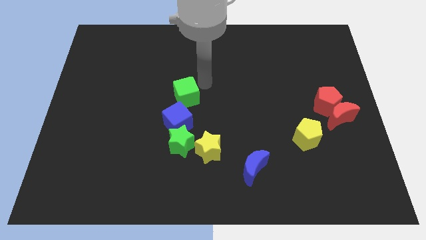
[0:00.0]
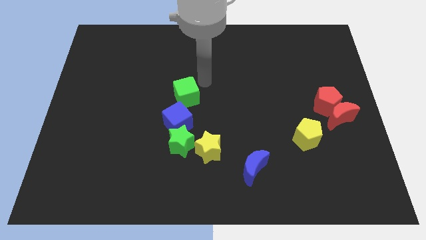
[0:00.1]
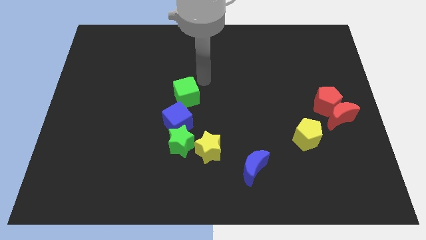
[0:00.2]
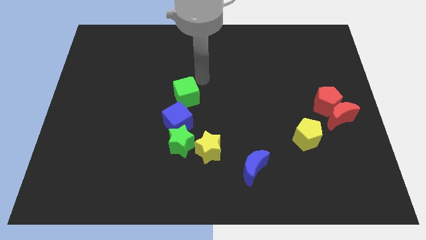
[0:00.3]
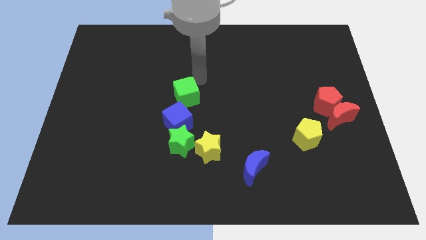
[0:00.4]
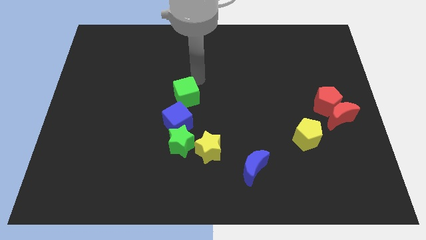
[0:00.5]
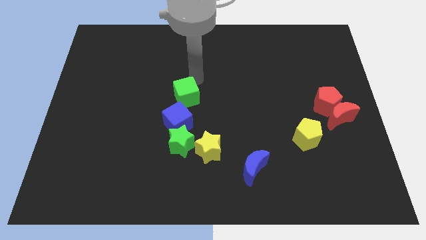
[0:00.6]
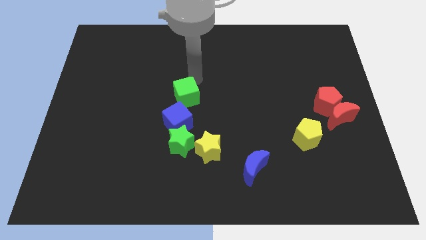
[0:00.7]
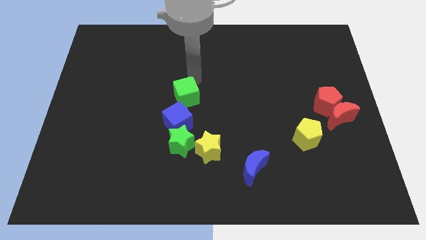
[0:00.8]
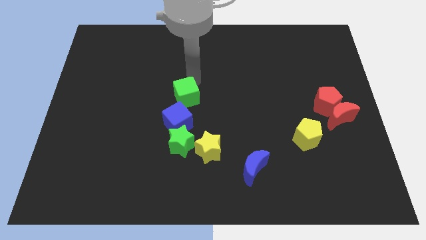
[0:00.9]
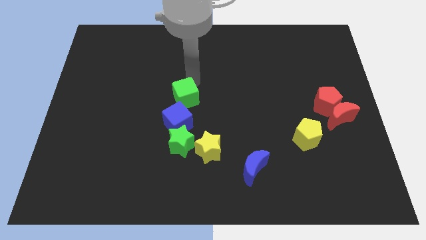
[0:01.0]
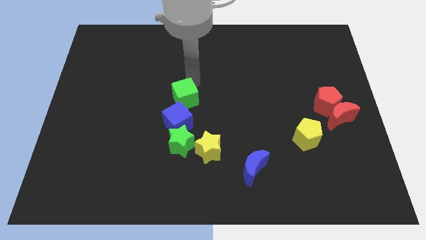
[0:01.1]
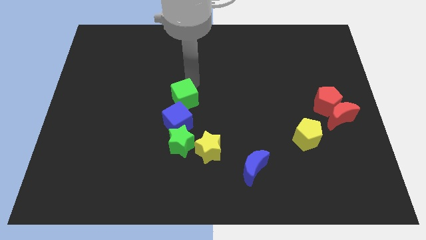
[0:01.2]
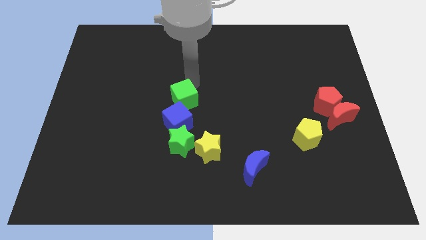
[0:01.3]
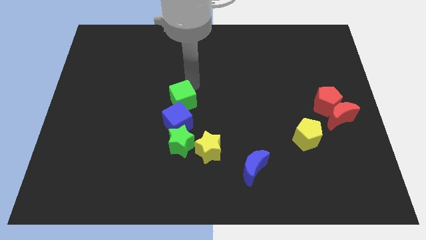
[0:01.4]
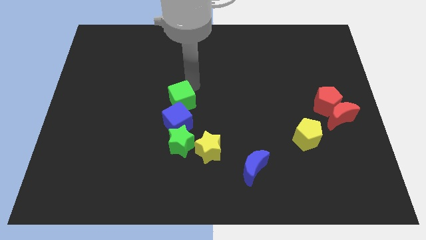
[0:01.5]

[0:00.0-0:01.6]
push green cube in to blue cube

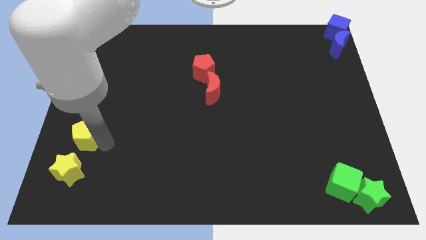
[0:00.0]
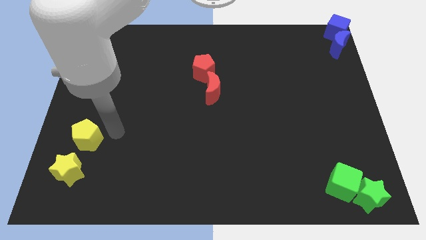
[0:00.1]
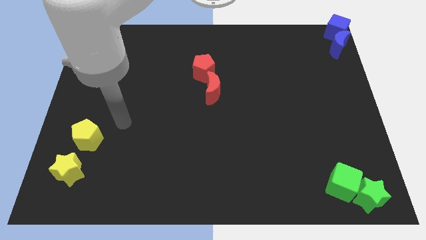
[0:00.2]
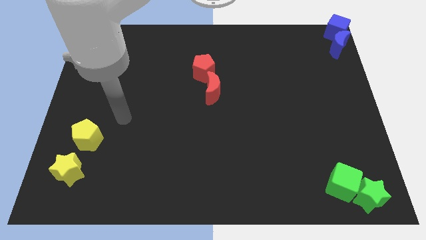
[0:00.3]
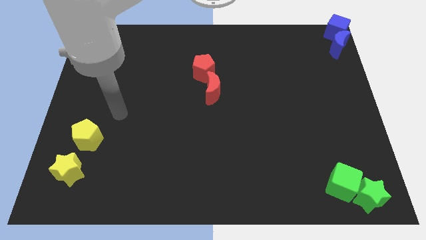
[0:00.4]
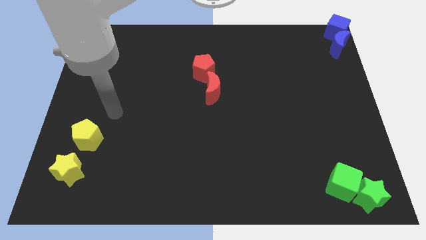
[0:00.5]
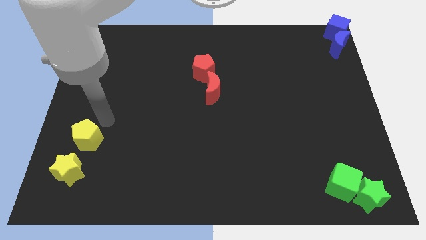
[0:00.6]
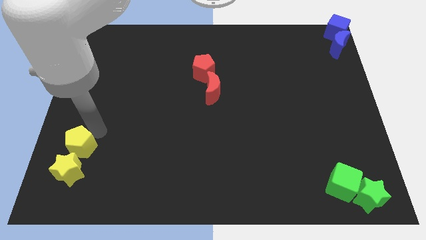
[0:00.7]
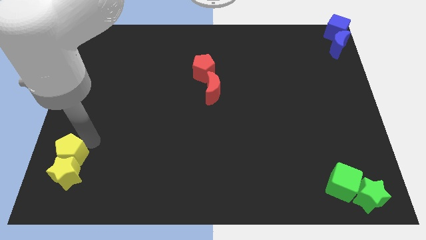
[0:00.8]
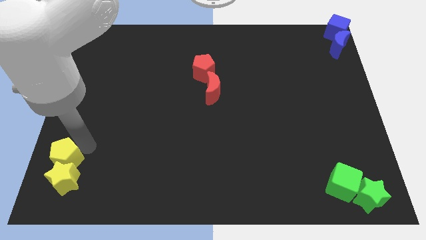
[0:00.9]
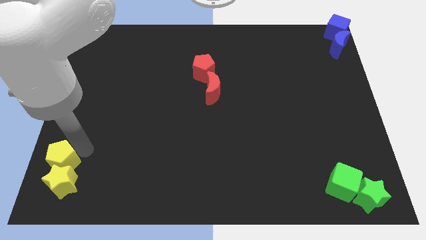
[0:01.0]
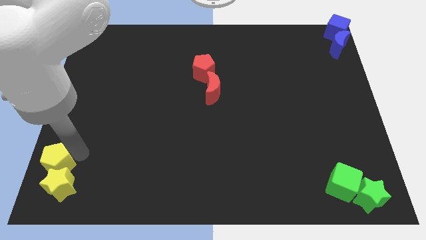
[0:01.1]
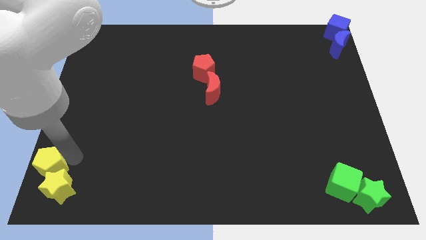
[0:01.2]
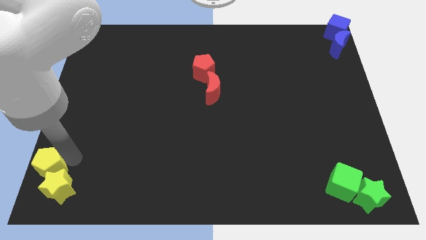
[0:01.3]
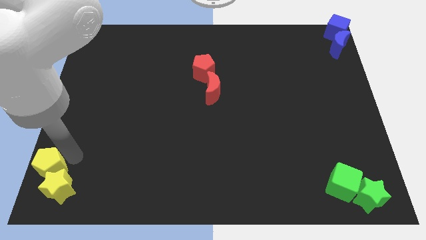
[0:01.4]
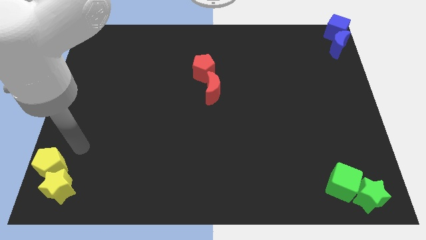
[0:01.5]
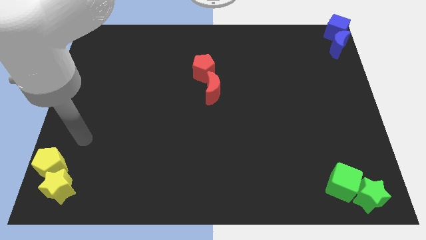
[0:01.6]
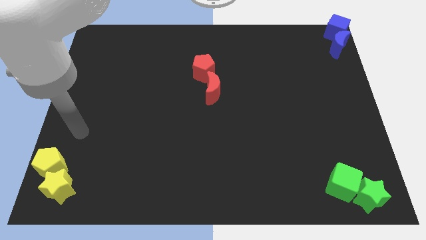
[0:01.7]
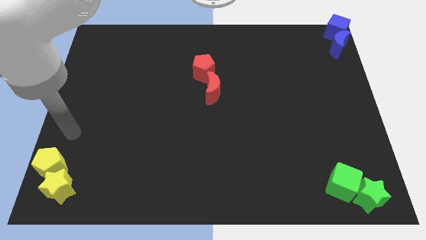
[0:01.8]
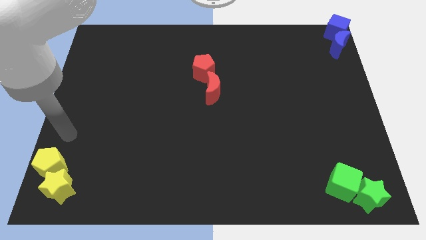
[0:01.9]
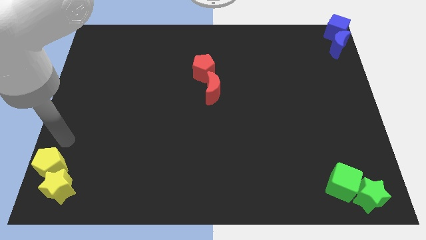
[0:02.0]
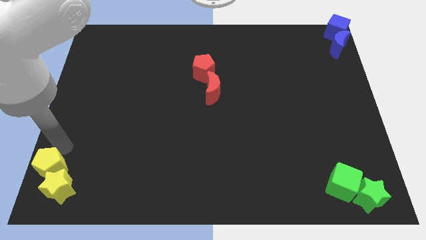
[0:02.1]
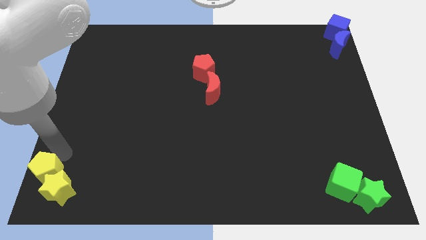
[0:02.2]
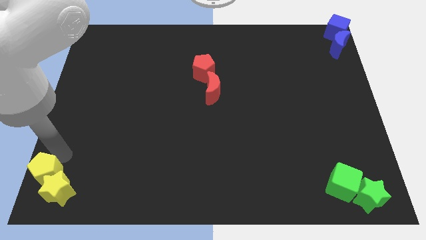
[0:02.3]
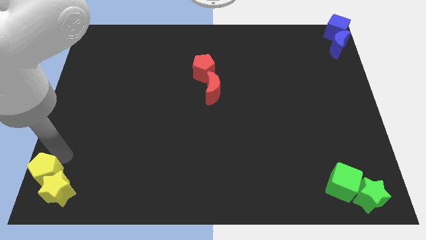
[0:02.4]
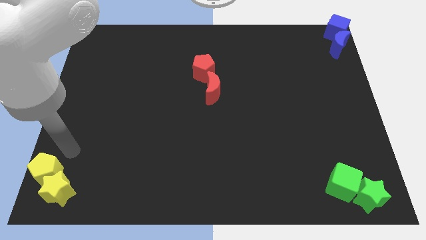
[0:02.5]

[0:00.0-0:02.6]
push the yellow pentagon into the yellow star

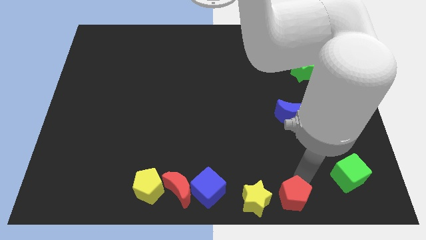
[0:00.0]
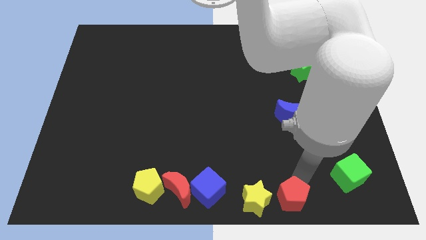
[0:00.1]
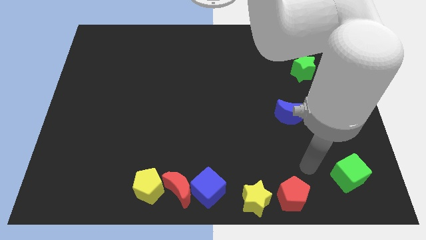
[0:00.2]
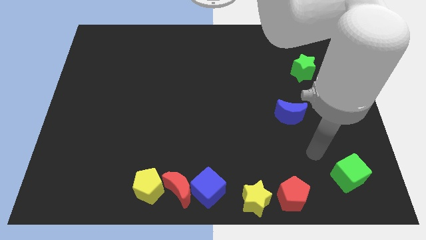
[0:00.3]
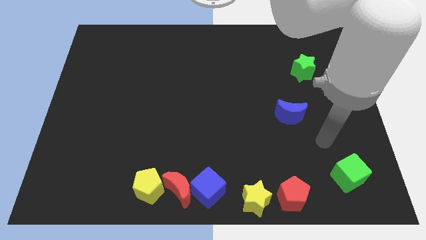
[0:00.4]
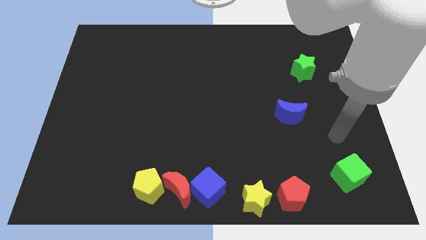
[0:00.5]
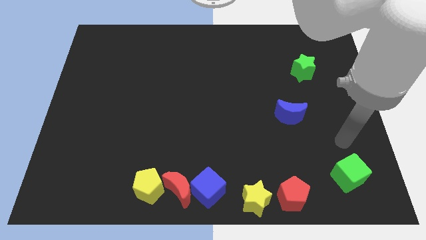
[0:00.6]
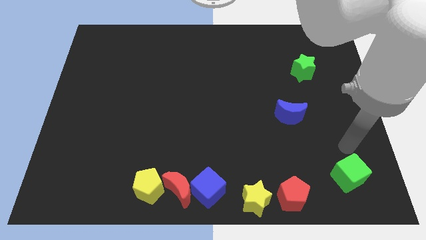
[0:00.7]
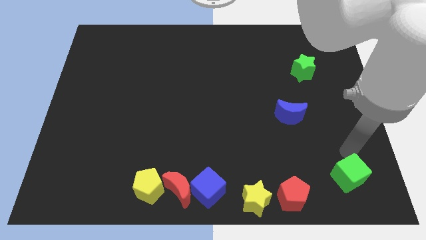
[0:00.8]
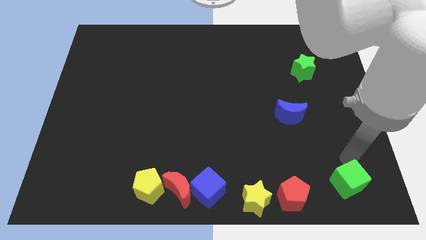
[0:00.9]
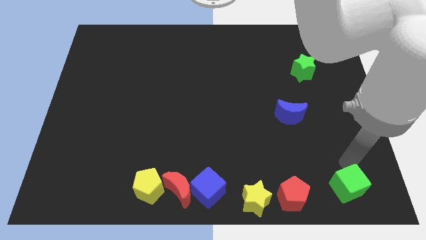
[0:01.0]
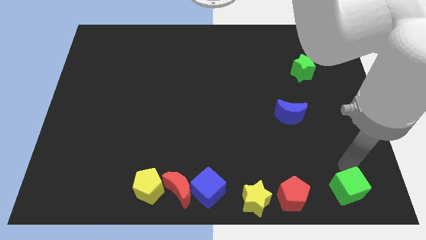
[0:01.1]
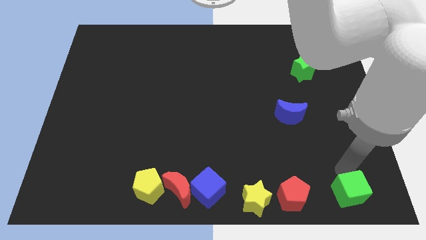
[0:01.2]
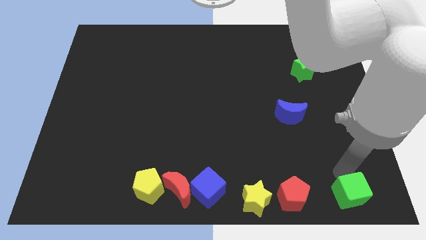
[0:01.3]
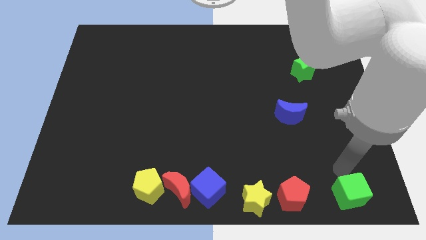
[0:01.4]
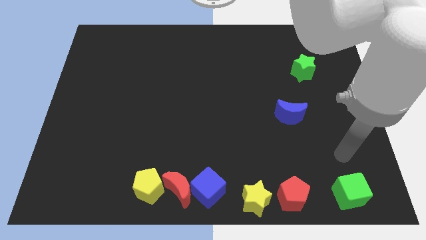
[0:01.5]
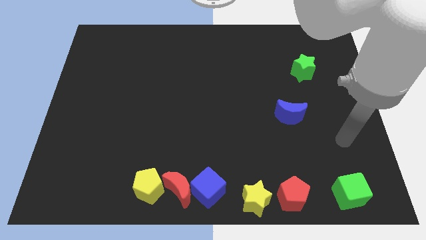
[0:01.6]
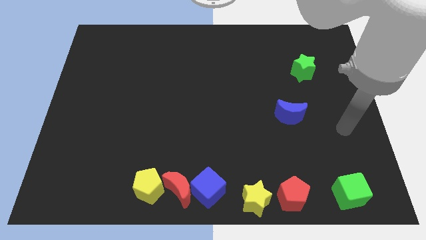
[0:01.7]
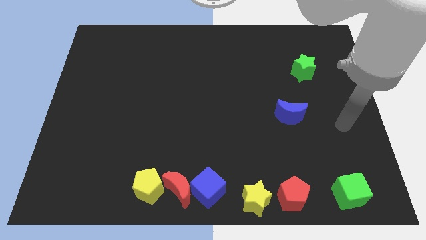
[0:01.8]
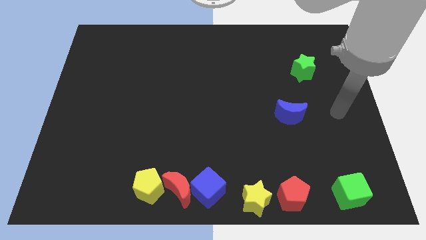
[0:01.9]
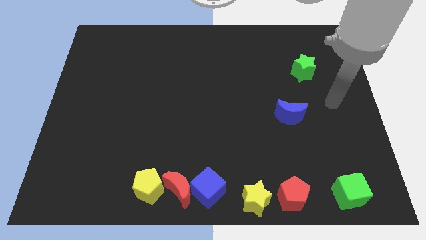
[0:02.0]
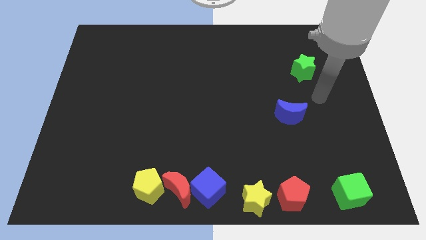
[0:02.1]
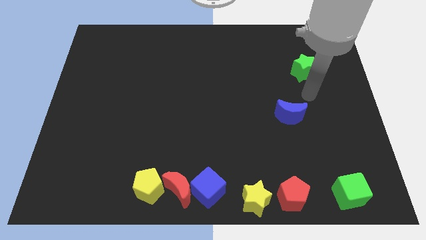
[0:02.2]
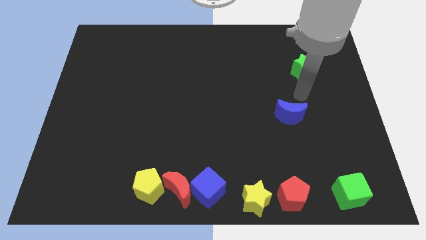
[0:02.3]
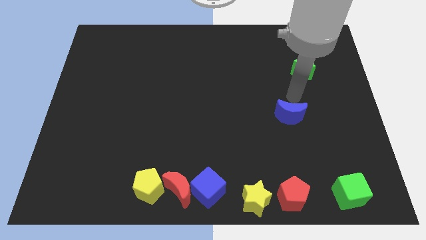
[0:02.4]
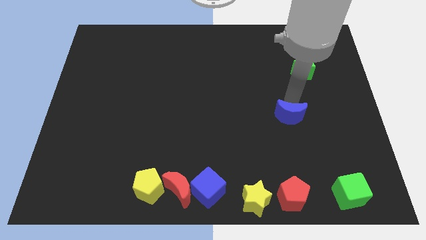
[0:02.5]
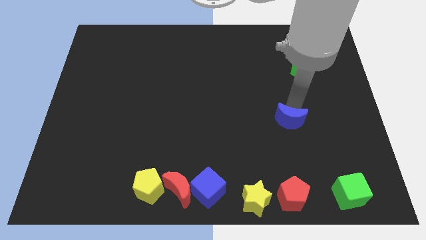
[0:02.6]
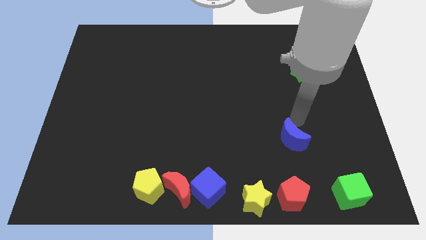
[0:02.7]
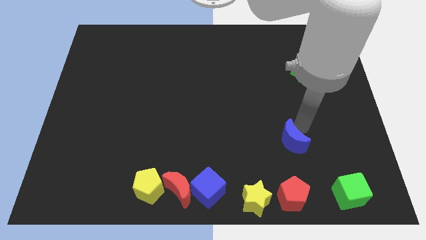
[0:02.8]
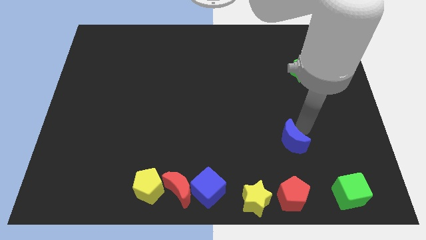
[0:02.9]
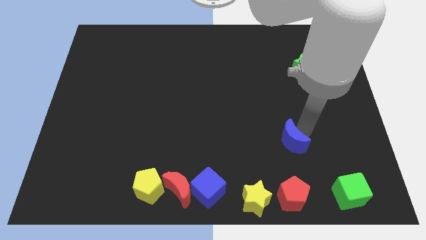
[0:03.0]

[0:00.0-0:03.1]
move the green cube right to the red pentagon

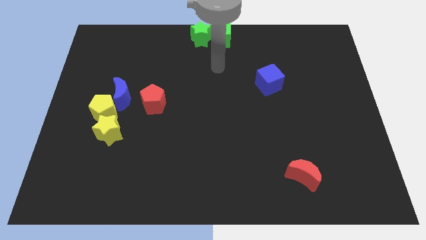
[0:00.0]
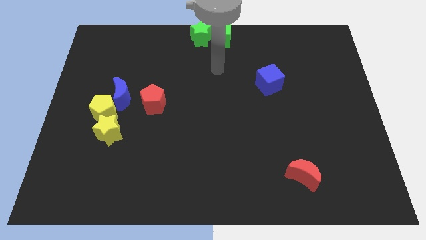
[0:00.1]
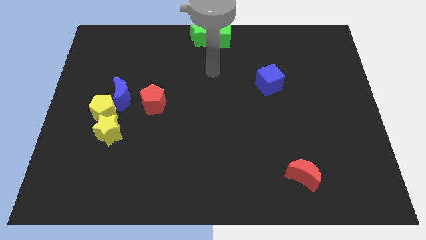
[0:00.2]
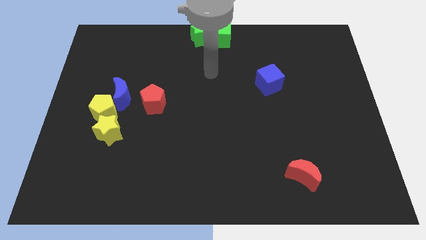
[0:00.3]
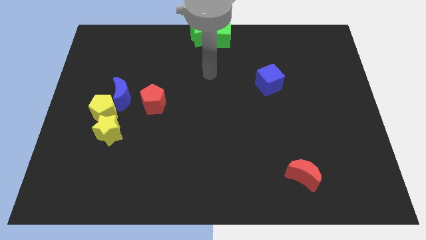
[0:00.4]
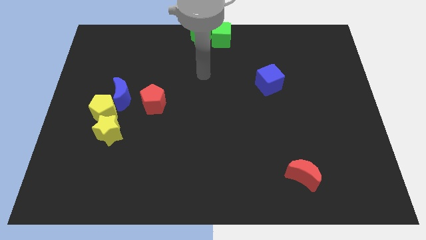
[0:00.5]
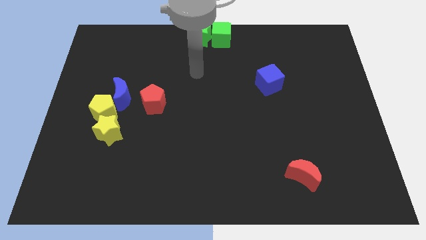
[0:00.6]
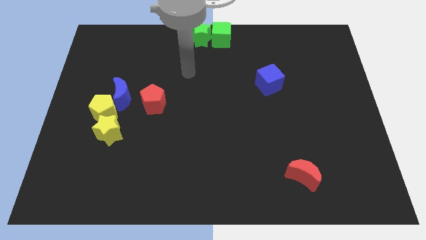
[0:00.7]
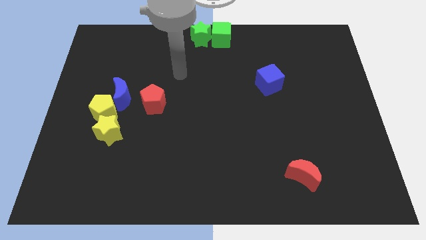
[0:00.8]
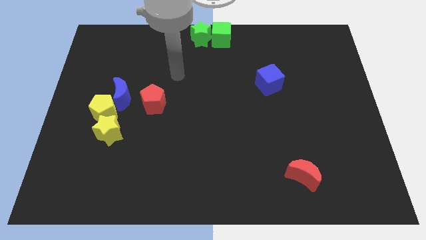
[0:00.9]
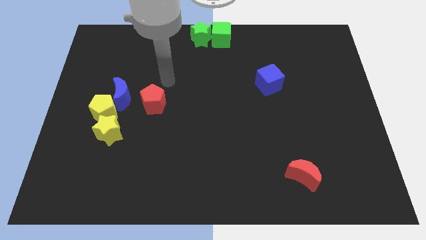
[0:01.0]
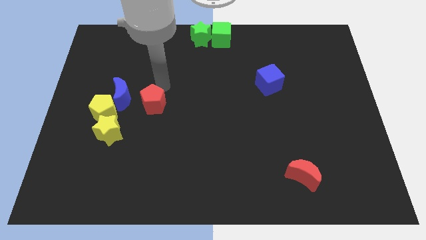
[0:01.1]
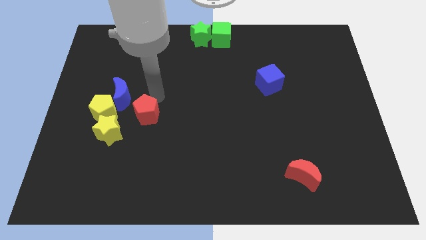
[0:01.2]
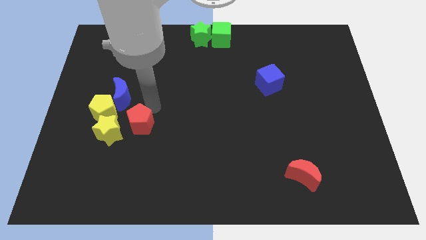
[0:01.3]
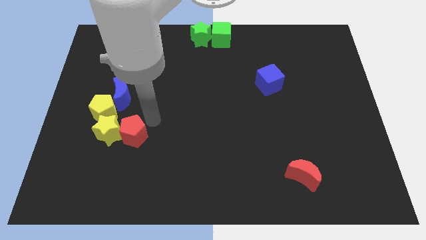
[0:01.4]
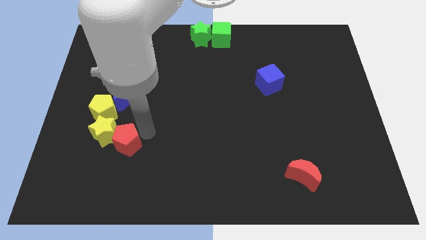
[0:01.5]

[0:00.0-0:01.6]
slide the red pentagon into the yellow star

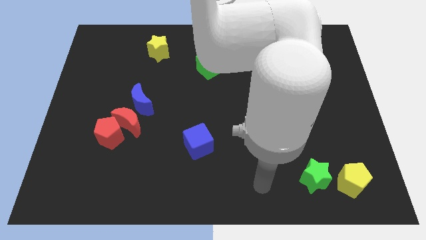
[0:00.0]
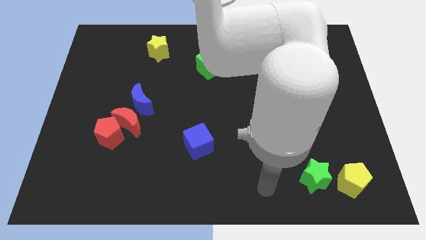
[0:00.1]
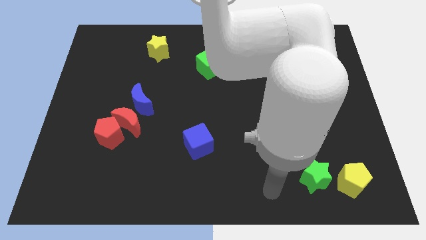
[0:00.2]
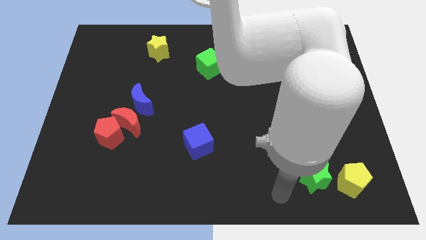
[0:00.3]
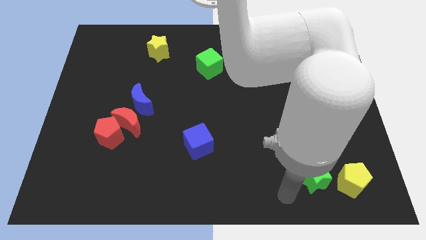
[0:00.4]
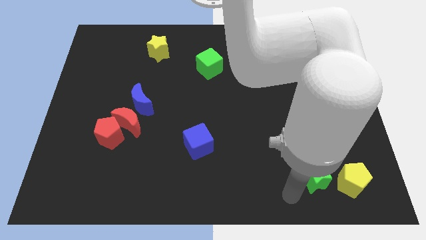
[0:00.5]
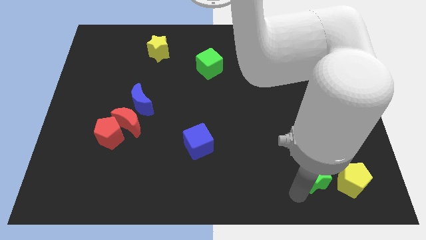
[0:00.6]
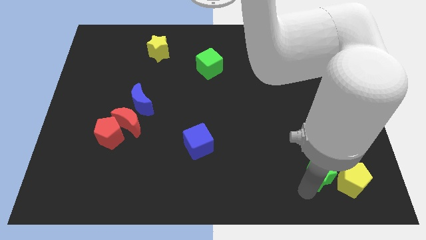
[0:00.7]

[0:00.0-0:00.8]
touch the bottom of green cube
